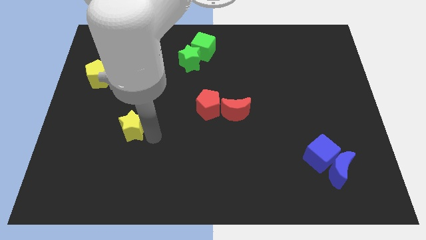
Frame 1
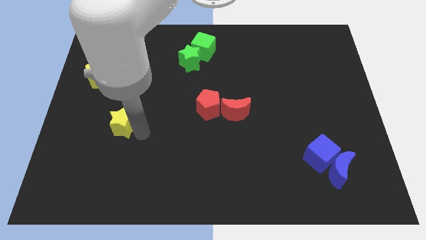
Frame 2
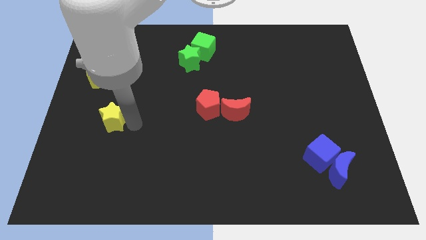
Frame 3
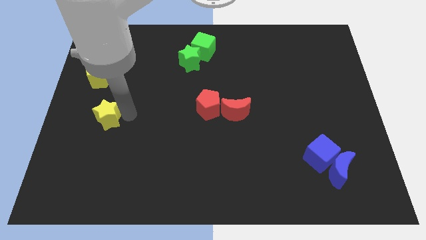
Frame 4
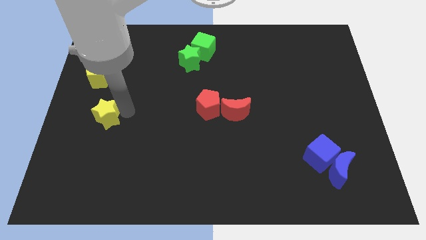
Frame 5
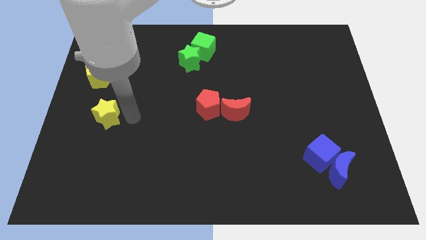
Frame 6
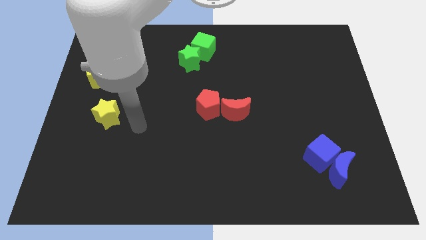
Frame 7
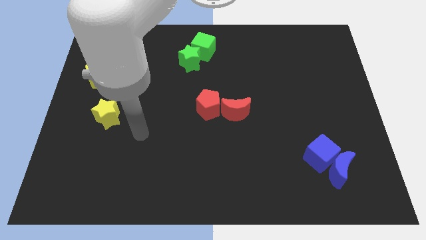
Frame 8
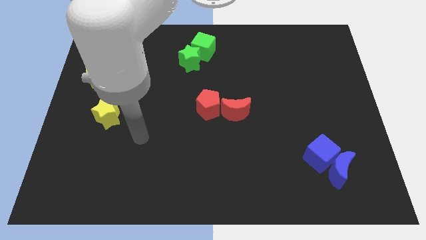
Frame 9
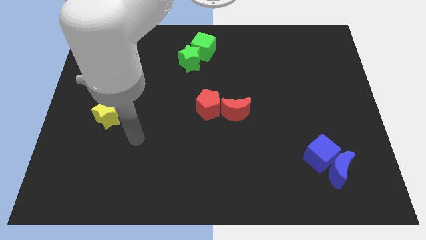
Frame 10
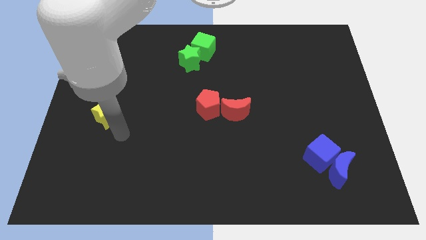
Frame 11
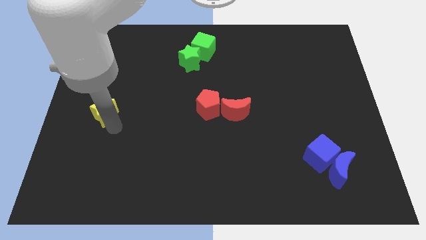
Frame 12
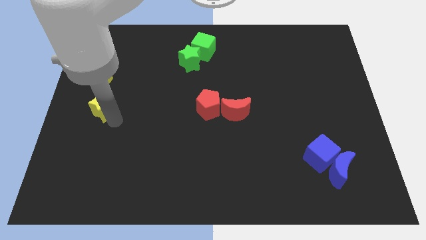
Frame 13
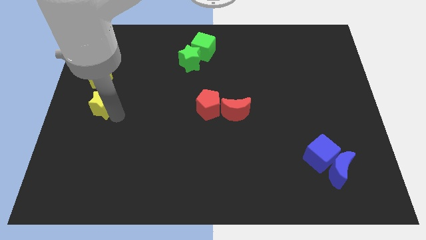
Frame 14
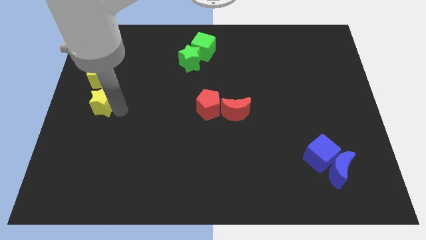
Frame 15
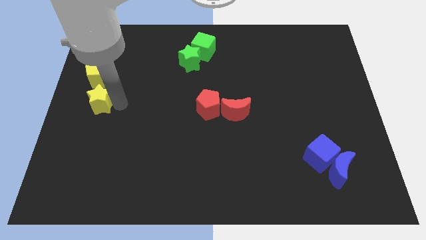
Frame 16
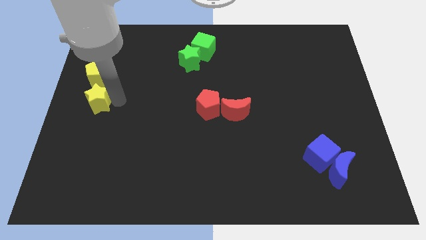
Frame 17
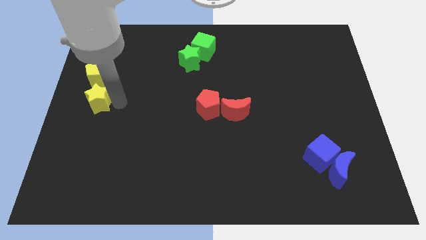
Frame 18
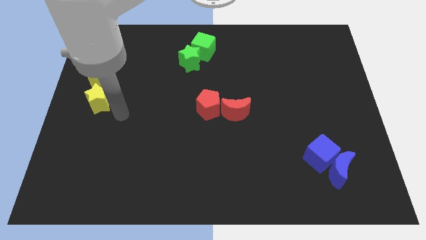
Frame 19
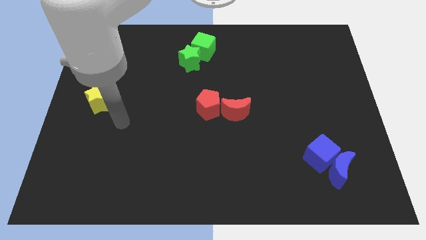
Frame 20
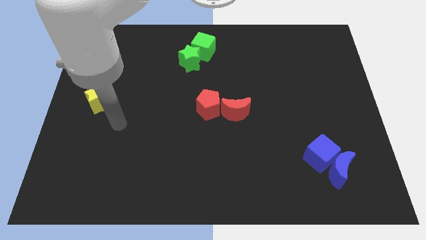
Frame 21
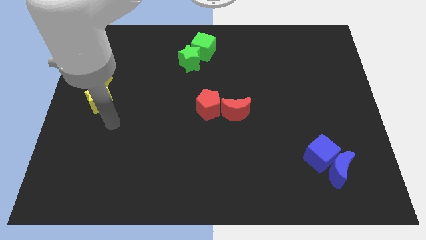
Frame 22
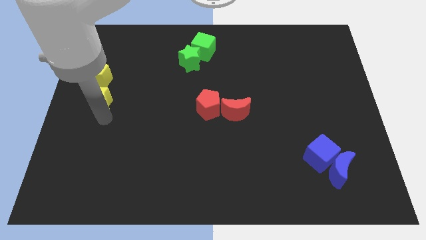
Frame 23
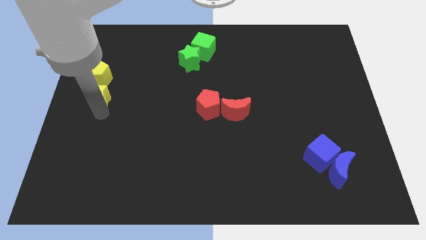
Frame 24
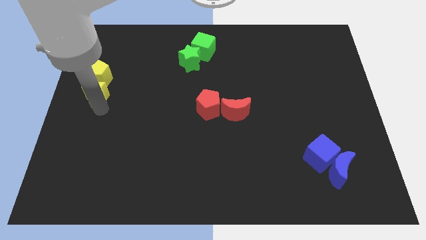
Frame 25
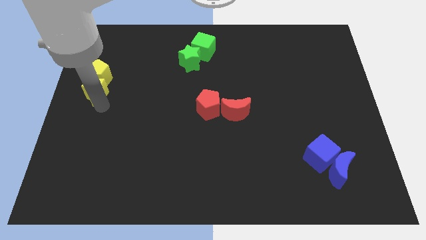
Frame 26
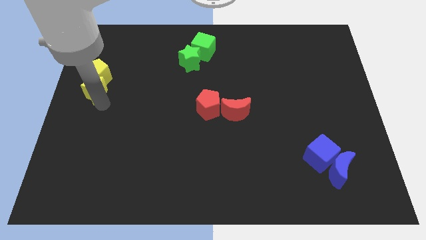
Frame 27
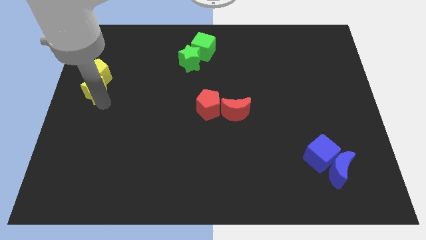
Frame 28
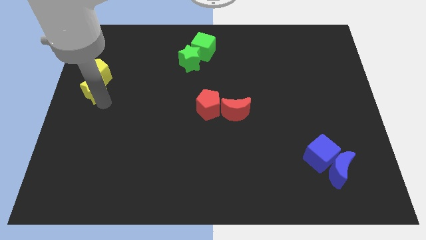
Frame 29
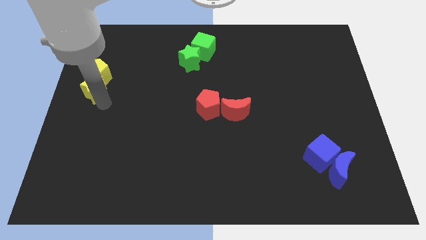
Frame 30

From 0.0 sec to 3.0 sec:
push the yellow star into the yellow pentagon

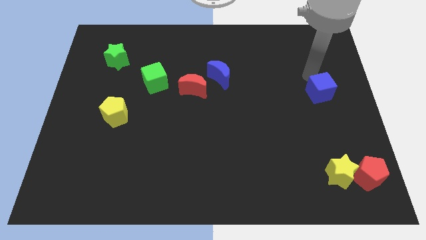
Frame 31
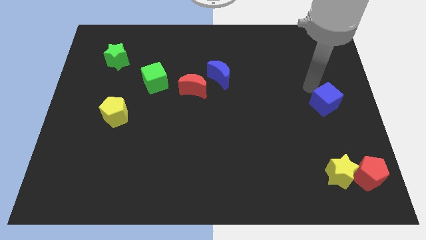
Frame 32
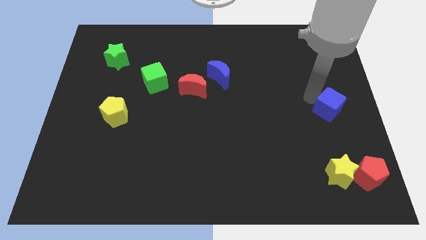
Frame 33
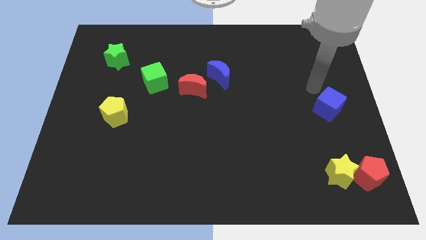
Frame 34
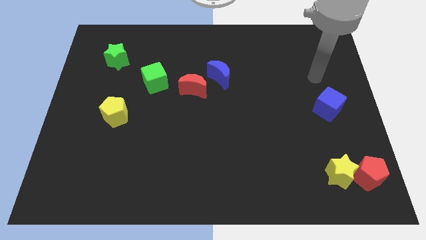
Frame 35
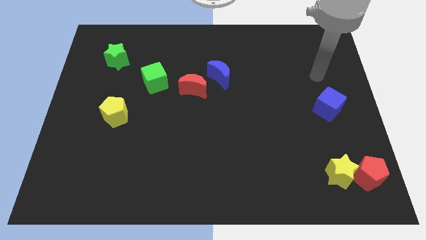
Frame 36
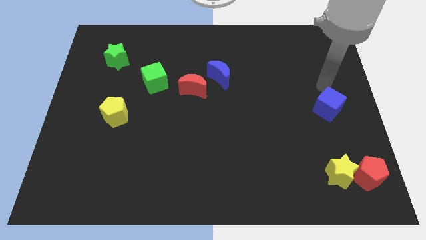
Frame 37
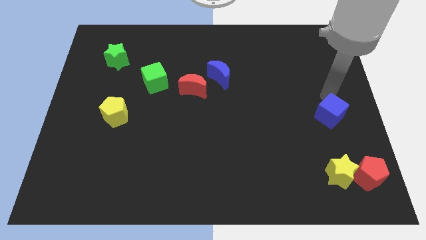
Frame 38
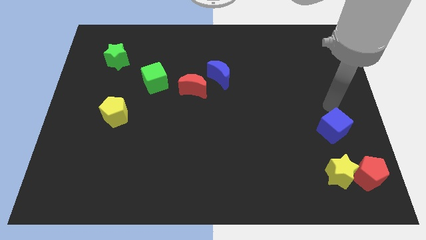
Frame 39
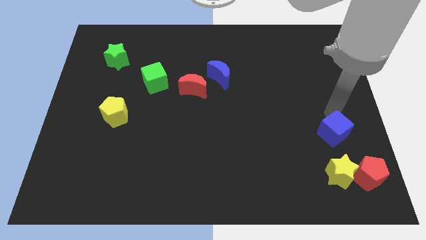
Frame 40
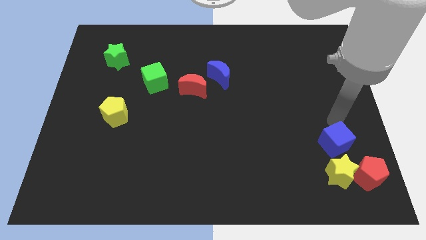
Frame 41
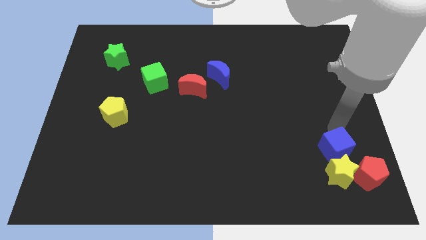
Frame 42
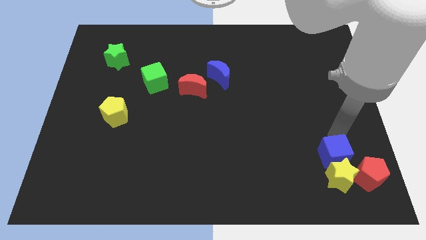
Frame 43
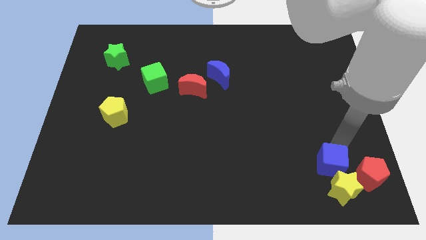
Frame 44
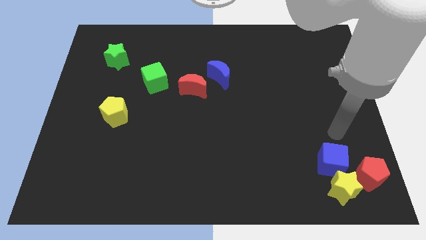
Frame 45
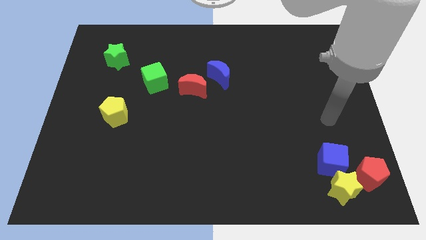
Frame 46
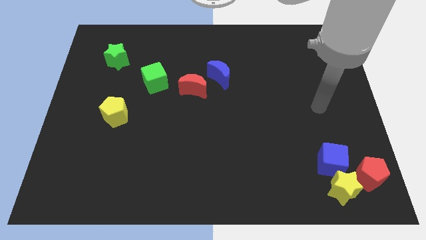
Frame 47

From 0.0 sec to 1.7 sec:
put the blue cube into the yellow star

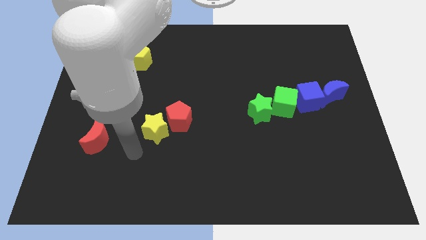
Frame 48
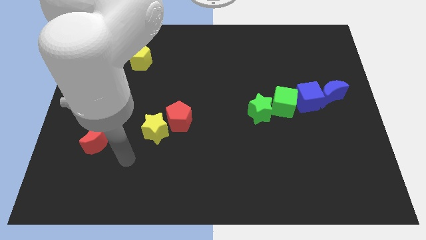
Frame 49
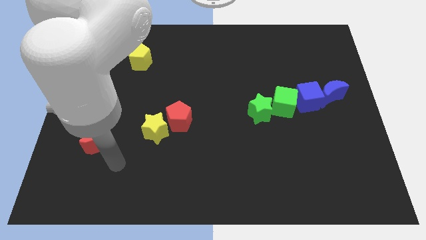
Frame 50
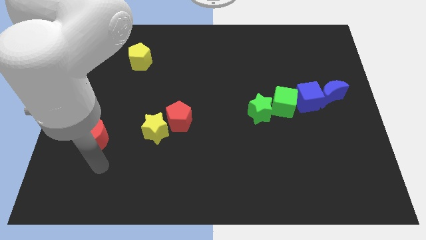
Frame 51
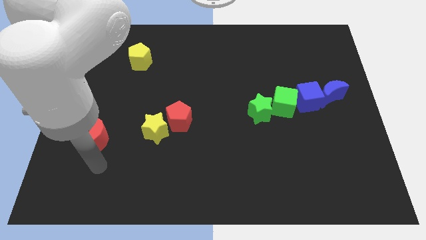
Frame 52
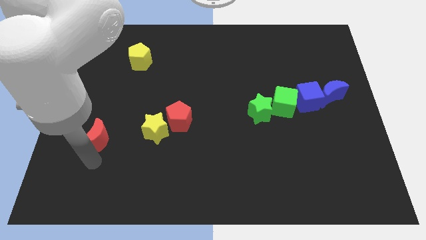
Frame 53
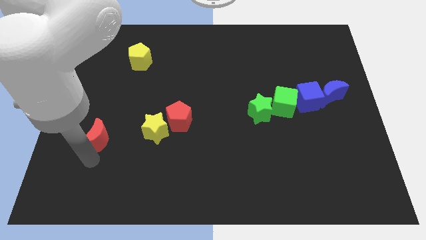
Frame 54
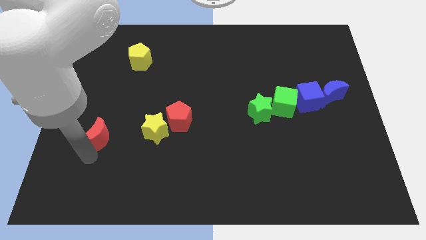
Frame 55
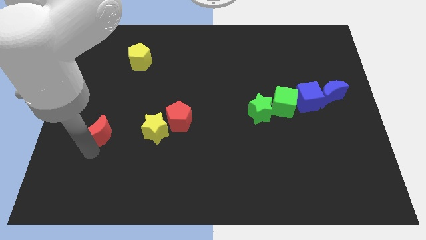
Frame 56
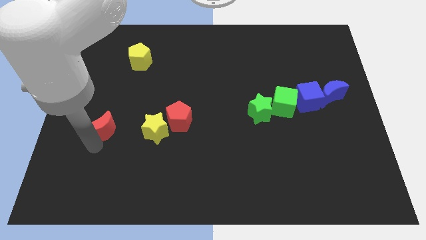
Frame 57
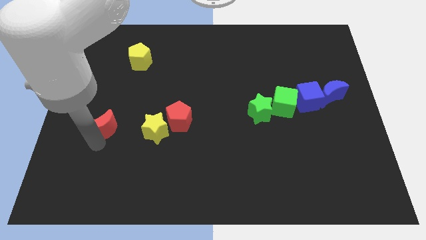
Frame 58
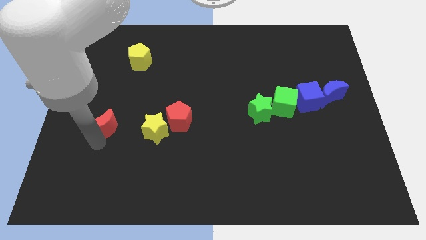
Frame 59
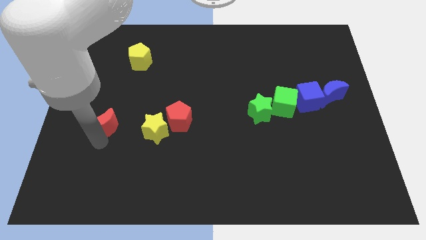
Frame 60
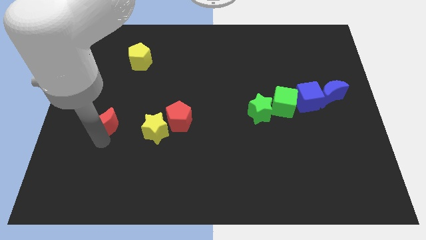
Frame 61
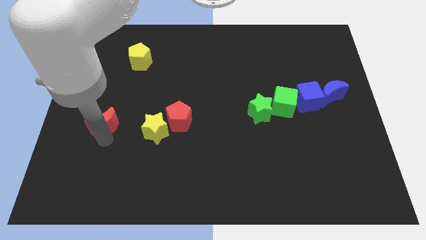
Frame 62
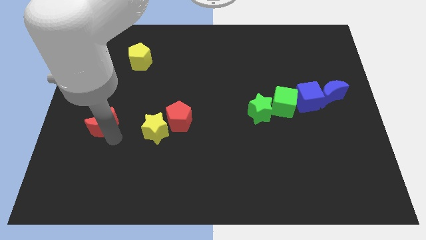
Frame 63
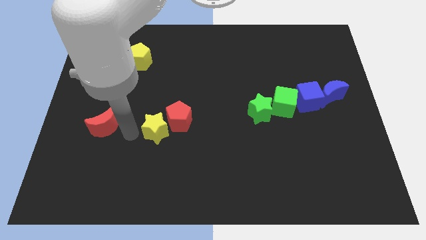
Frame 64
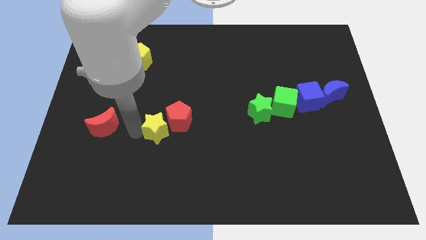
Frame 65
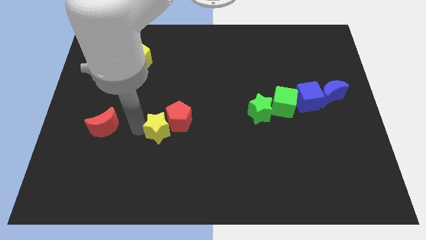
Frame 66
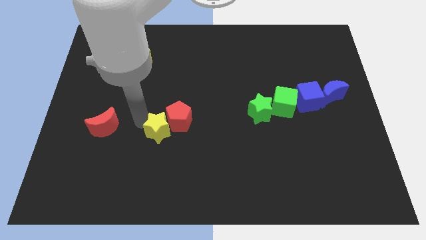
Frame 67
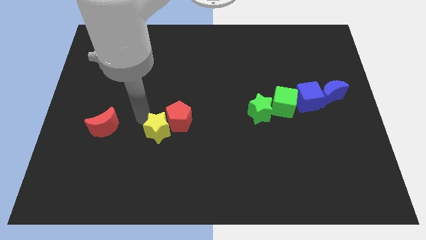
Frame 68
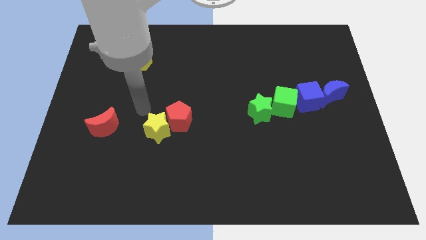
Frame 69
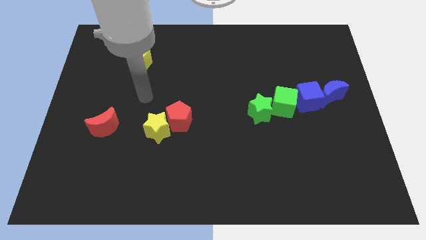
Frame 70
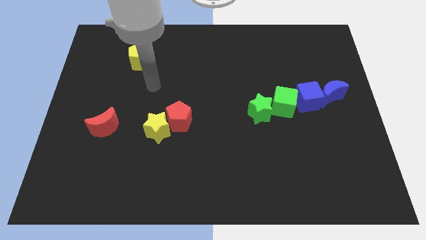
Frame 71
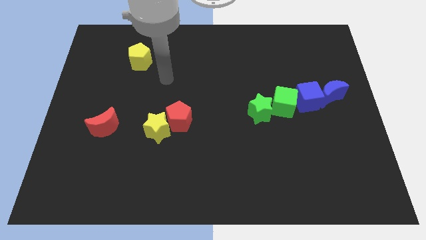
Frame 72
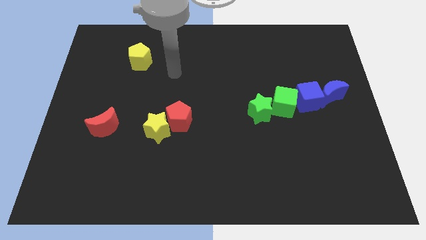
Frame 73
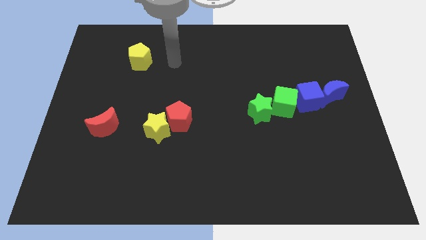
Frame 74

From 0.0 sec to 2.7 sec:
push the red moon to the left of the yellow star

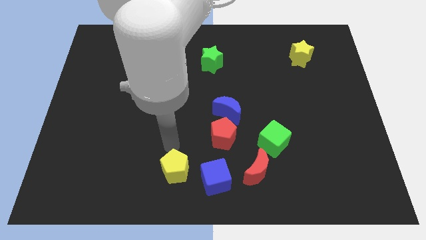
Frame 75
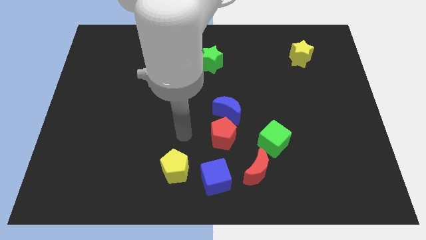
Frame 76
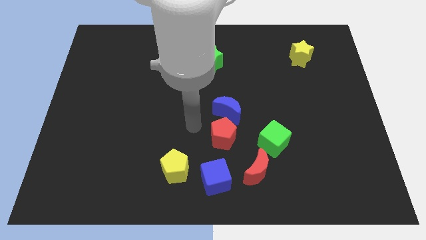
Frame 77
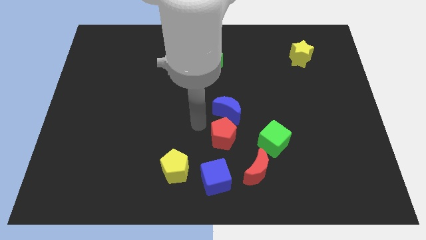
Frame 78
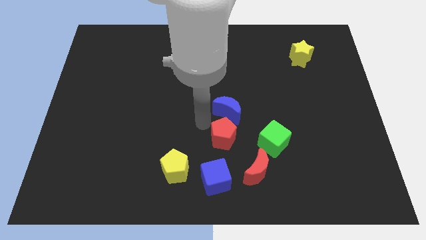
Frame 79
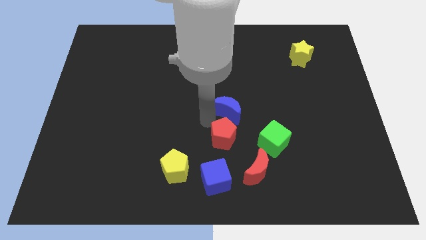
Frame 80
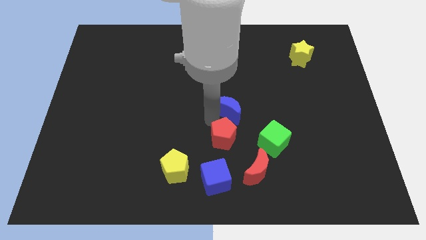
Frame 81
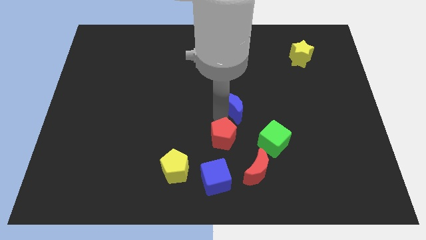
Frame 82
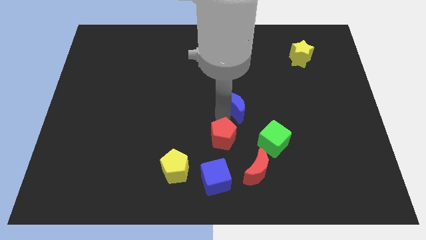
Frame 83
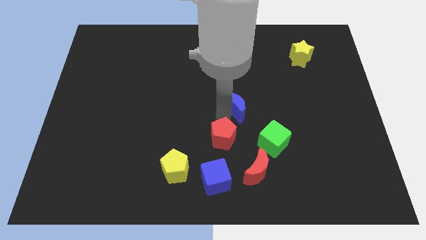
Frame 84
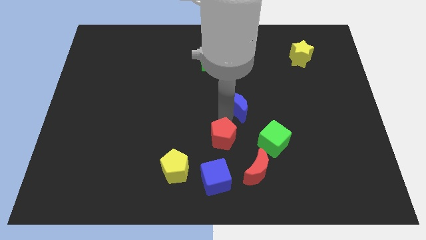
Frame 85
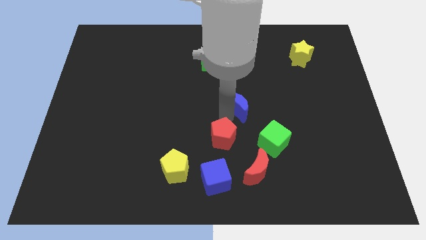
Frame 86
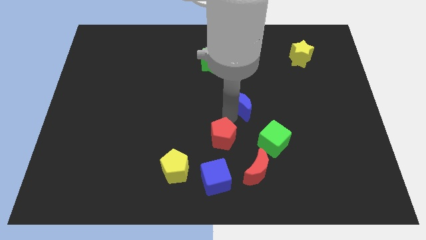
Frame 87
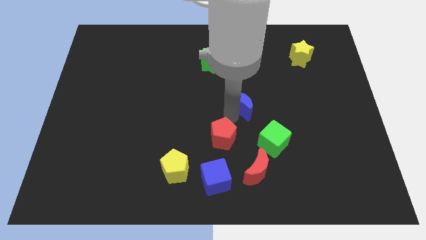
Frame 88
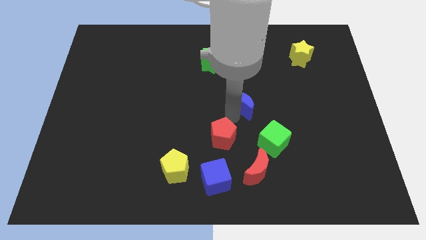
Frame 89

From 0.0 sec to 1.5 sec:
separate the blue crescent from the red pentagon
